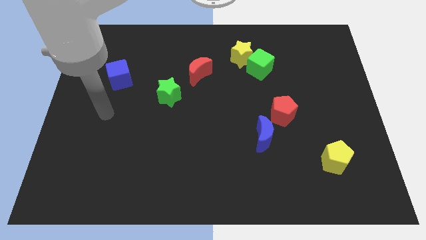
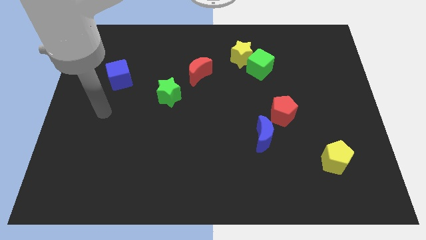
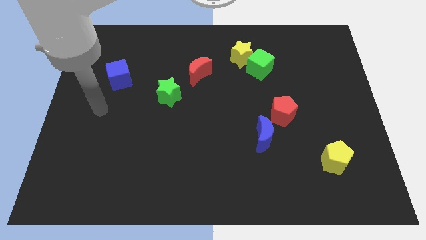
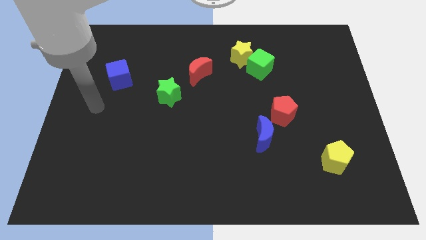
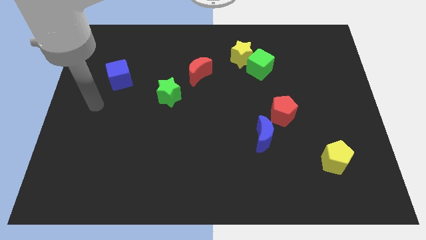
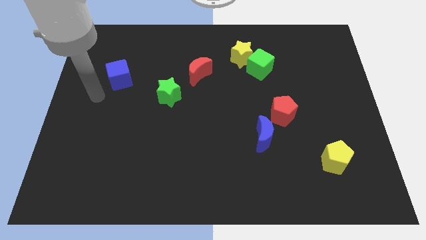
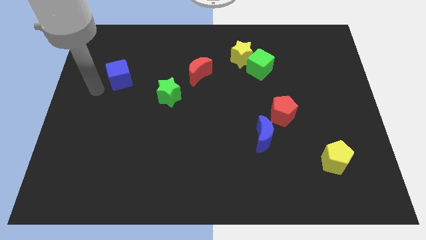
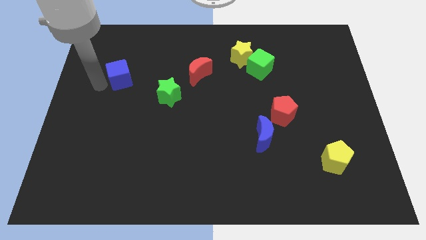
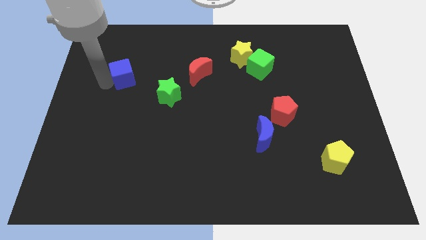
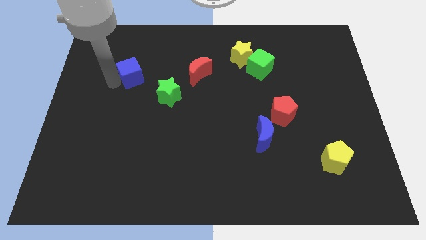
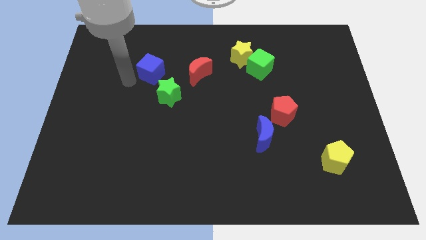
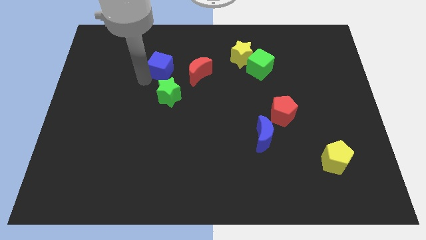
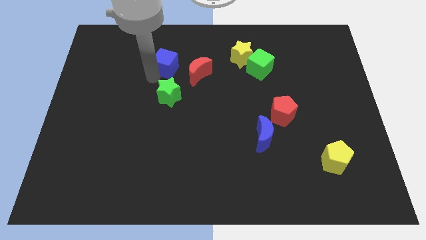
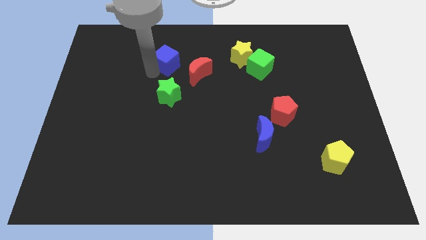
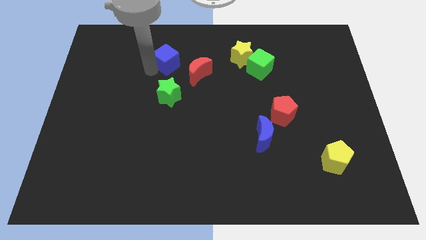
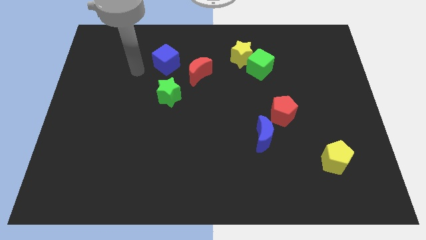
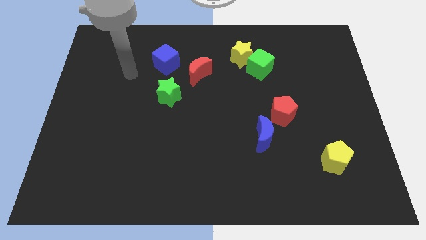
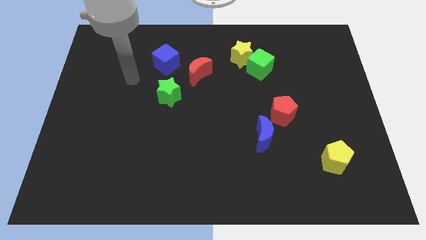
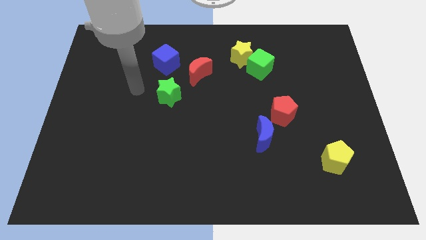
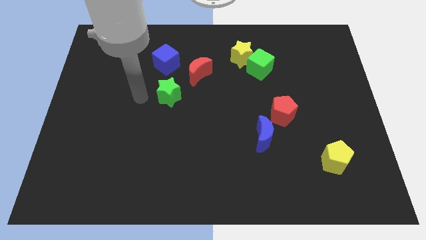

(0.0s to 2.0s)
push the blue cube above green star

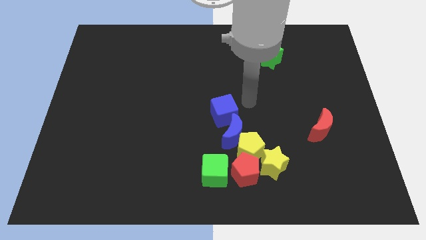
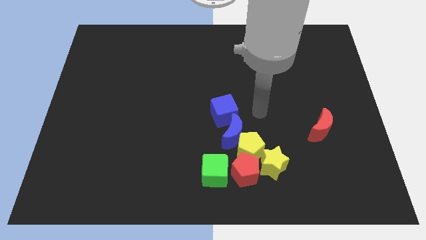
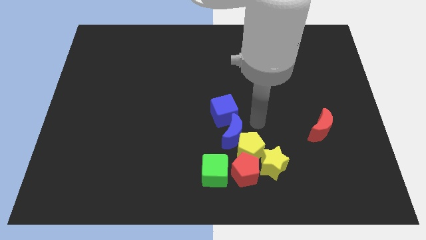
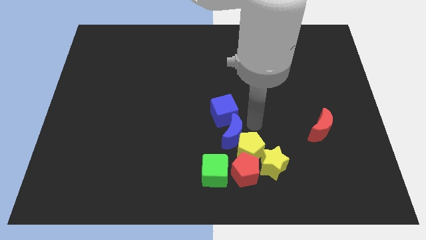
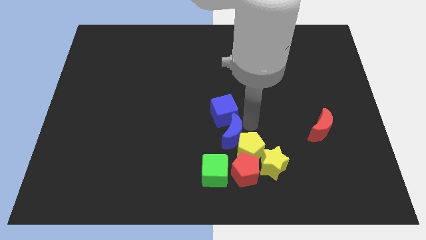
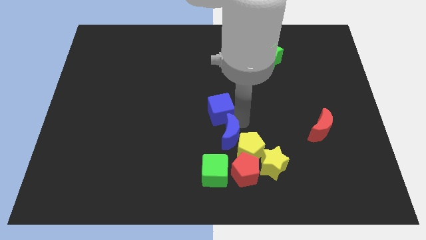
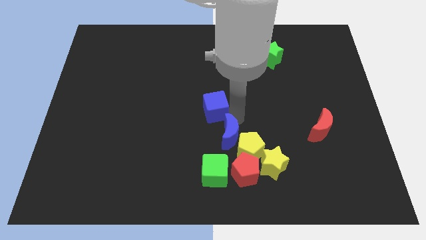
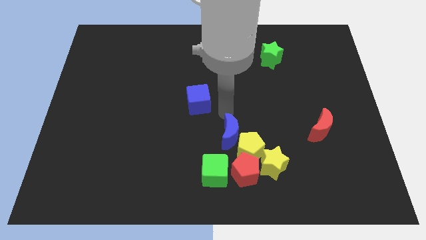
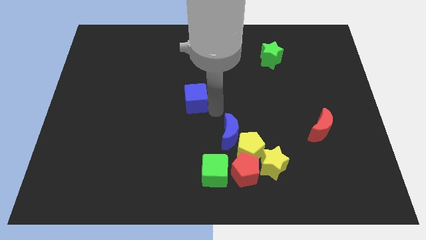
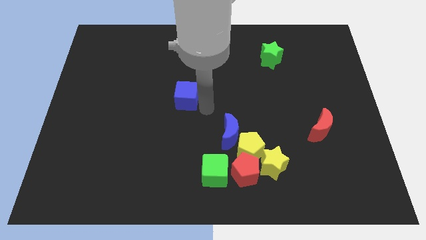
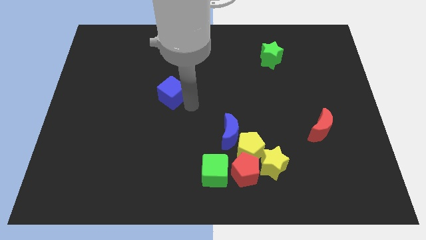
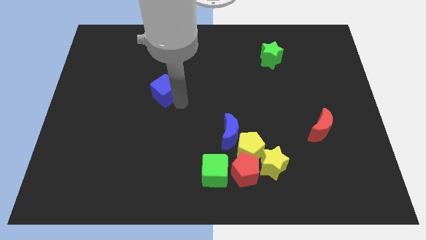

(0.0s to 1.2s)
move the blue cube slightly to the left

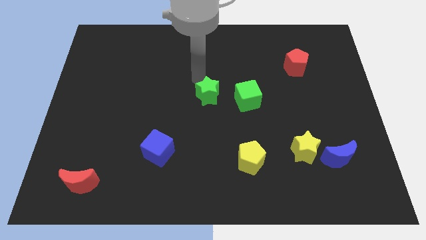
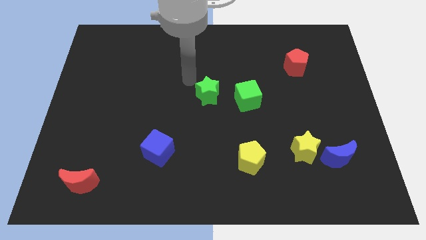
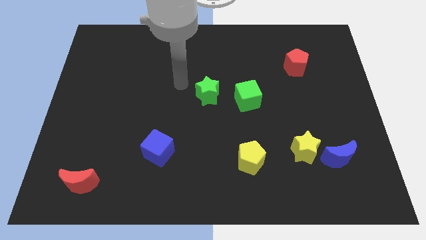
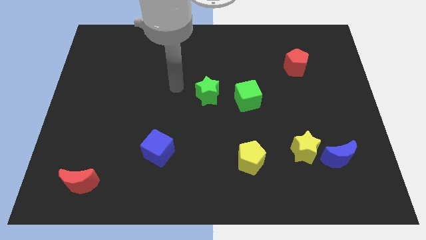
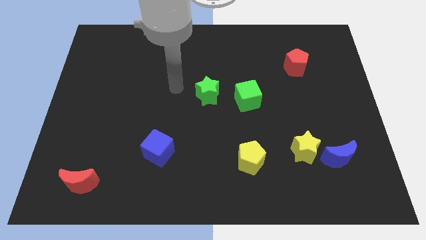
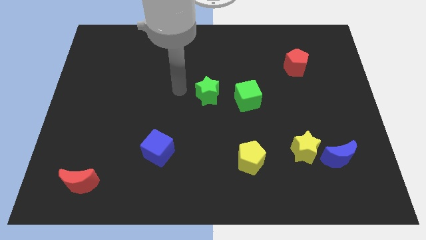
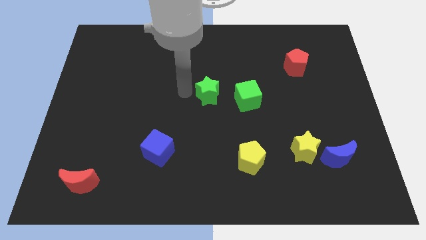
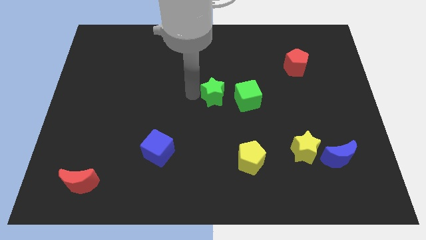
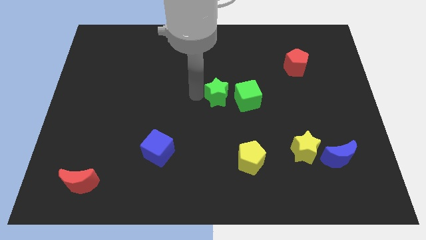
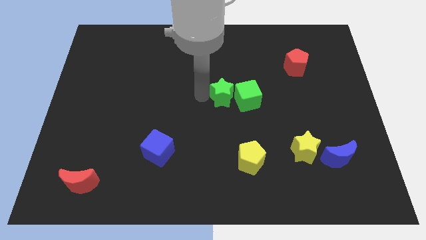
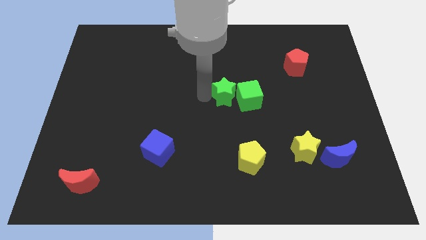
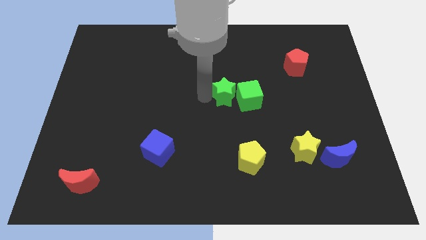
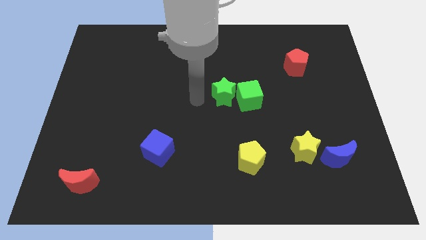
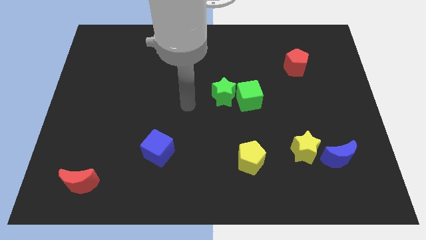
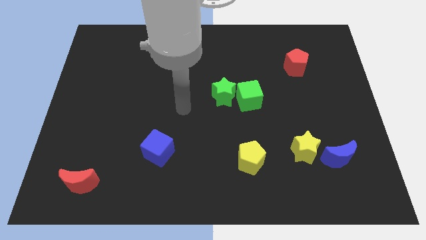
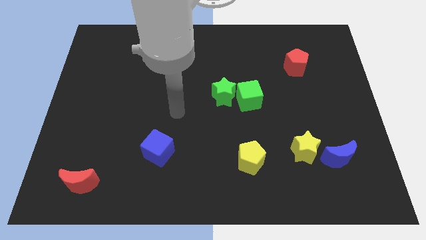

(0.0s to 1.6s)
slide the green star into the green cube

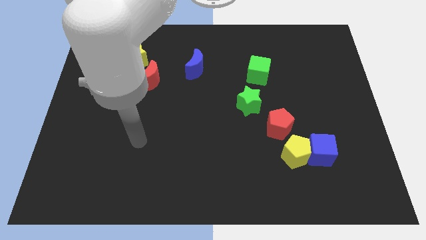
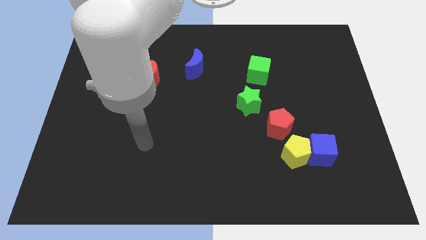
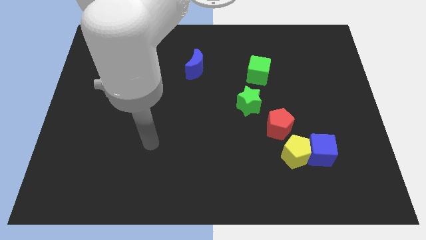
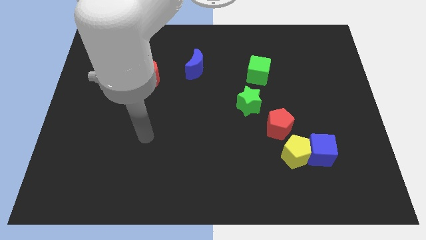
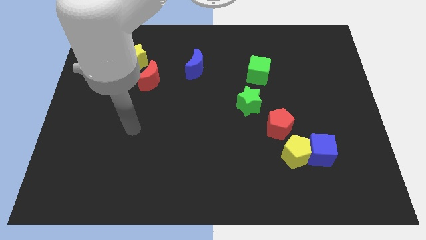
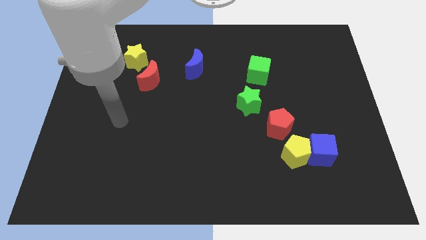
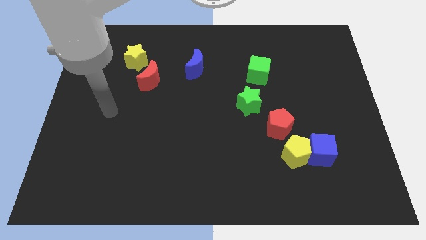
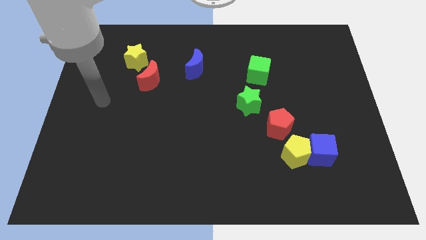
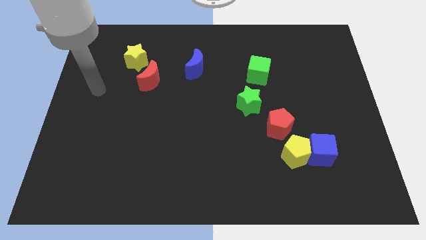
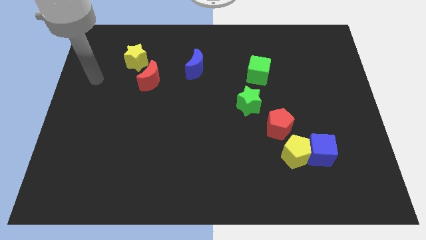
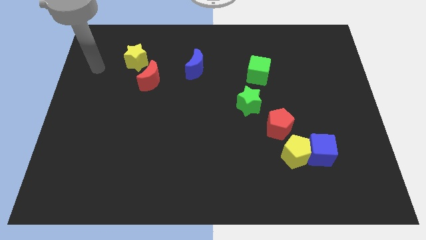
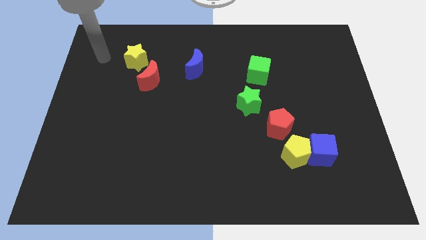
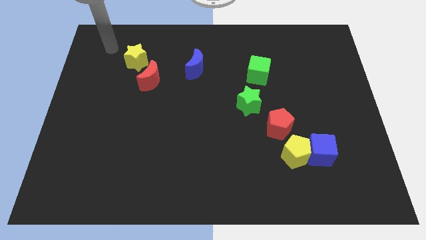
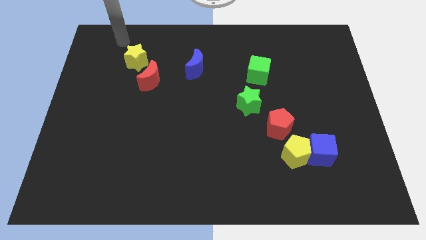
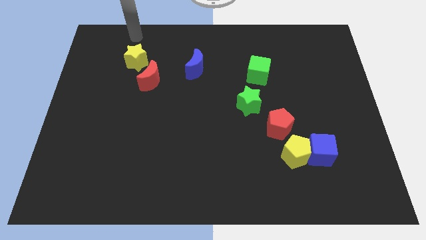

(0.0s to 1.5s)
go and place your hand above the yellow star

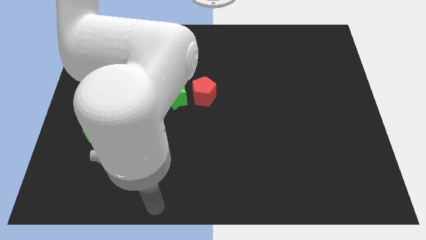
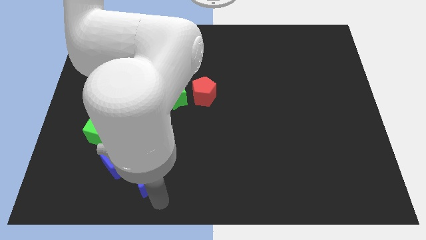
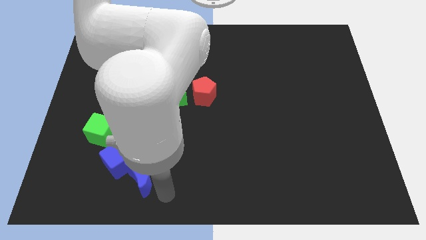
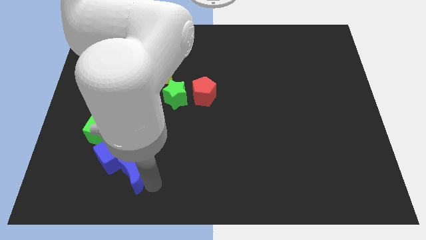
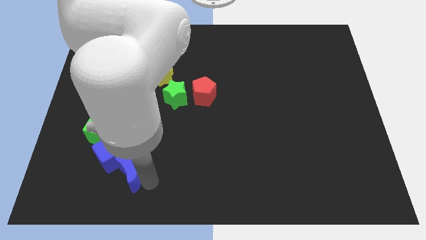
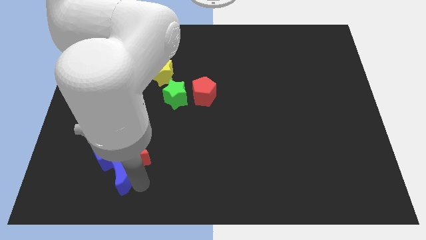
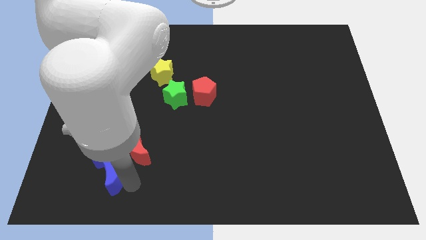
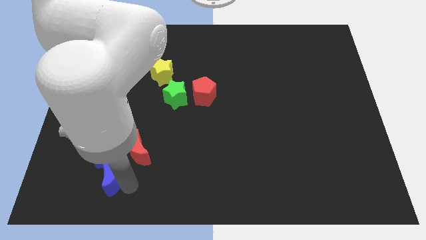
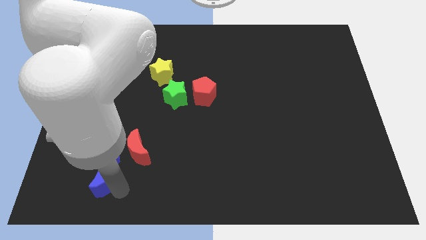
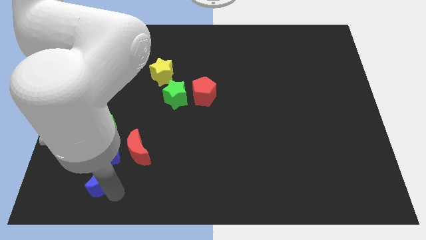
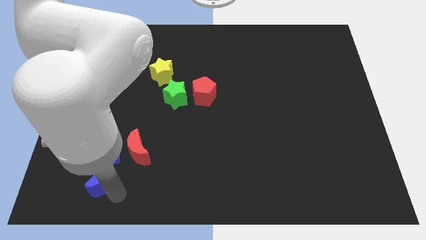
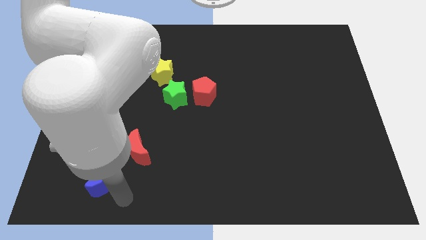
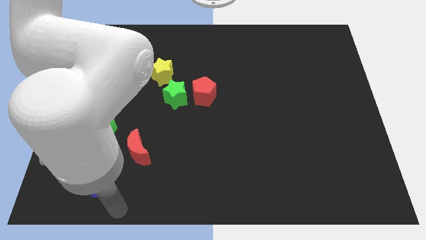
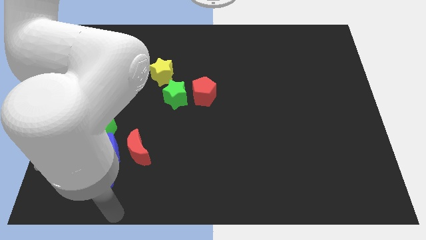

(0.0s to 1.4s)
push the blue crescent to the bottom of the blue cube

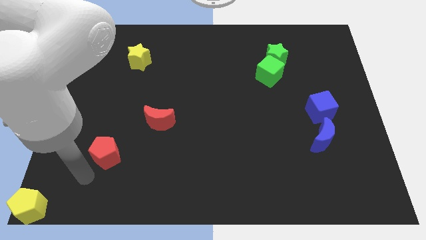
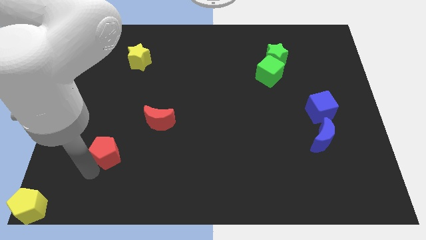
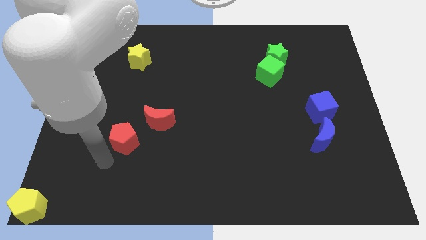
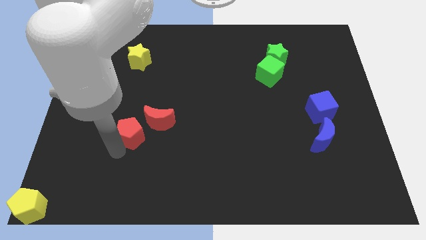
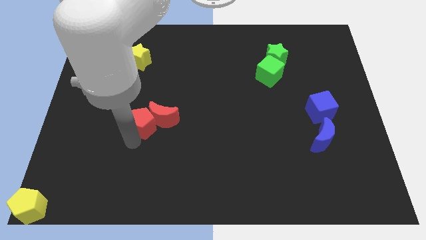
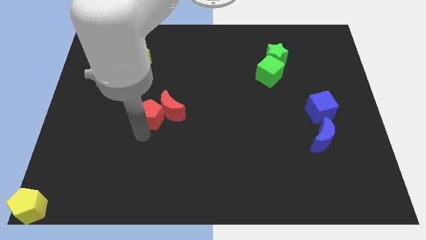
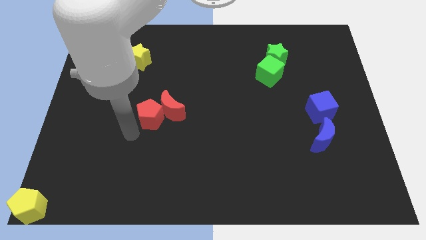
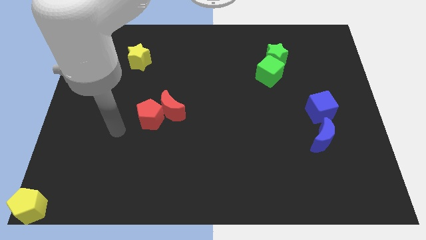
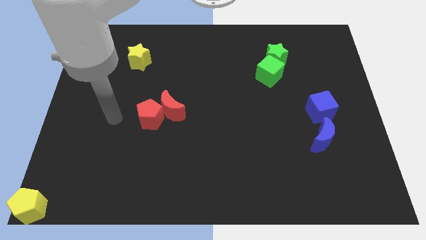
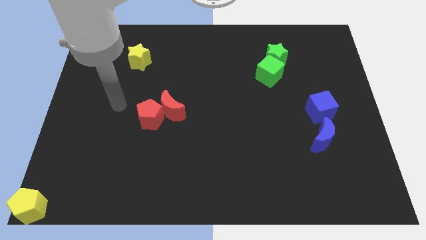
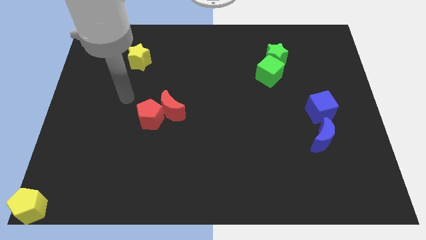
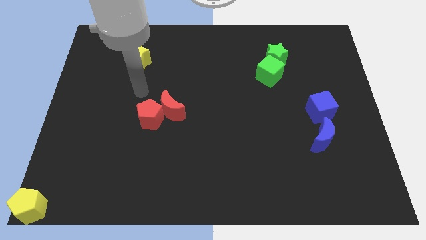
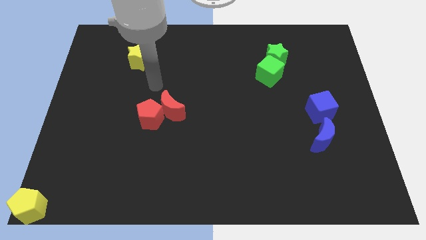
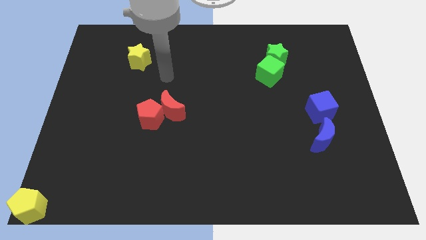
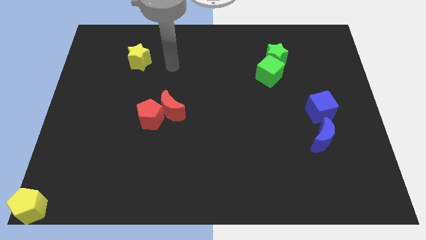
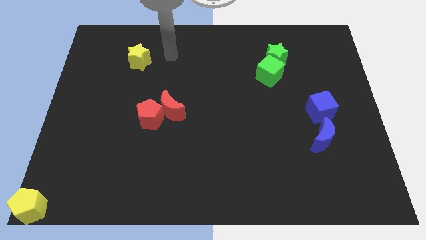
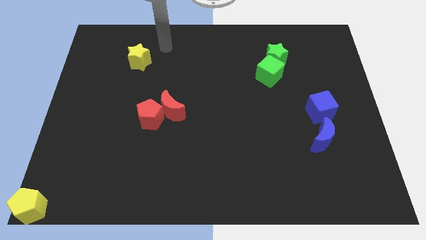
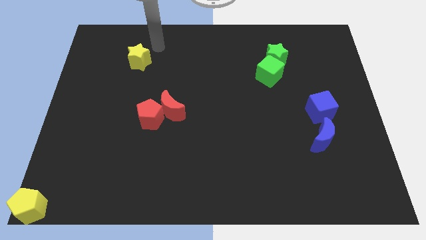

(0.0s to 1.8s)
push the red pentagon into red moon
